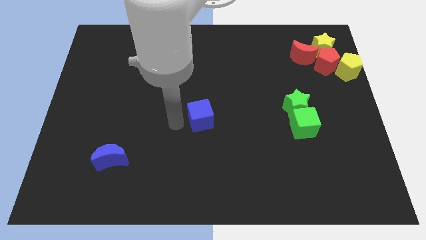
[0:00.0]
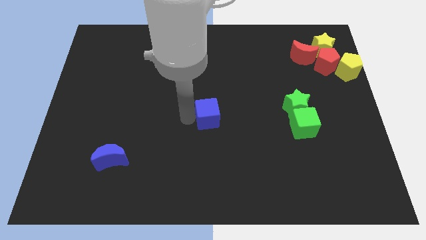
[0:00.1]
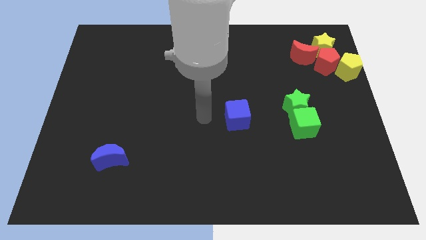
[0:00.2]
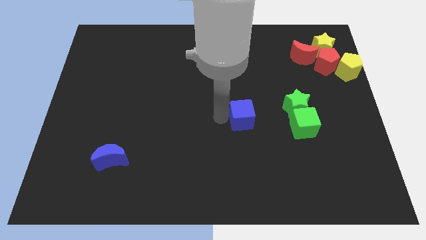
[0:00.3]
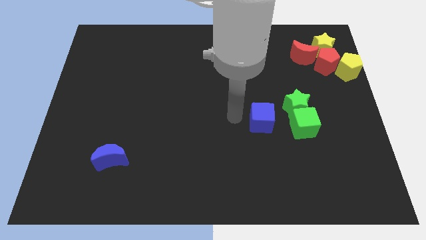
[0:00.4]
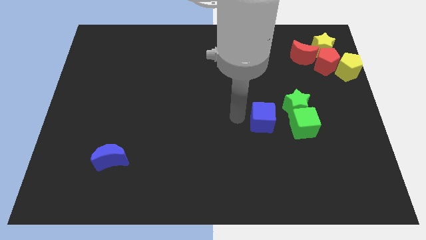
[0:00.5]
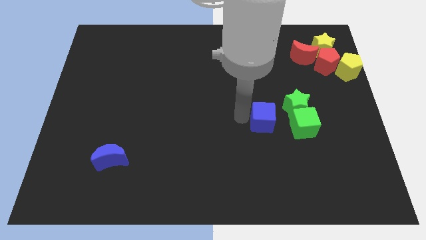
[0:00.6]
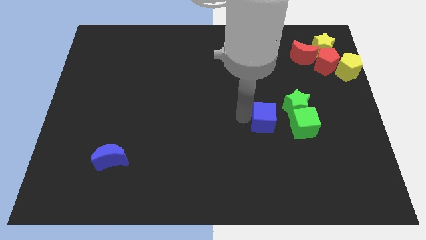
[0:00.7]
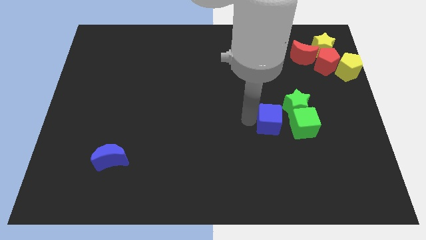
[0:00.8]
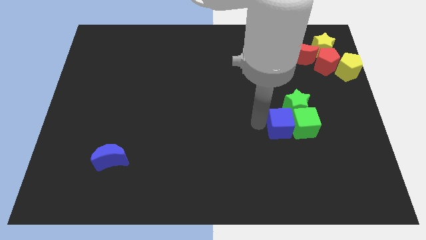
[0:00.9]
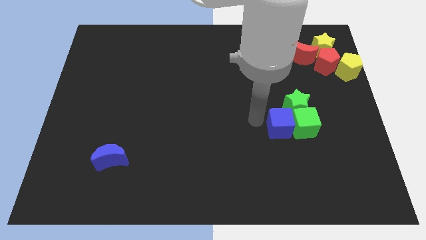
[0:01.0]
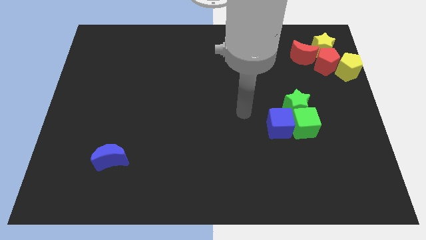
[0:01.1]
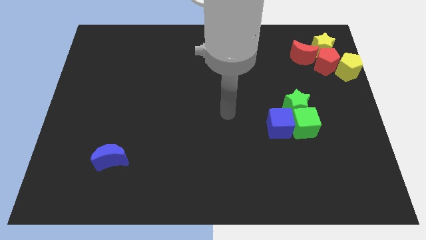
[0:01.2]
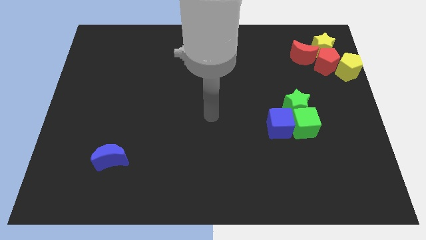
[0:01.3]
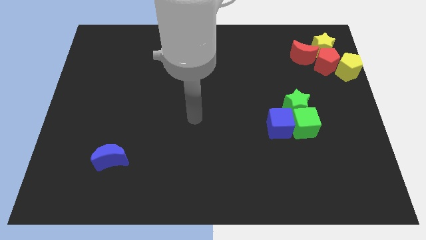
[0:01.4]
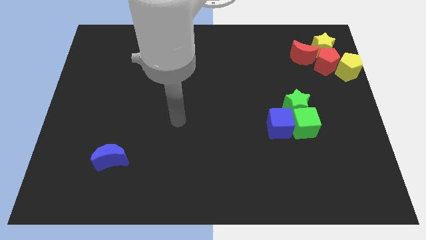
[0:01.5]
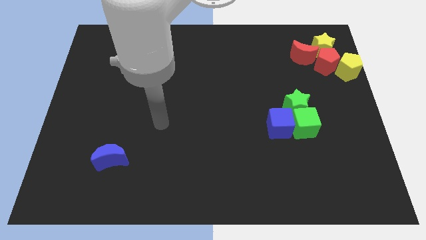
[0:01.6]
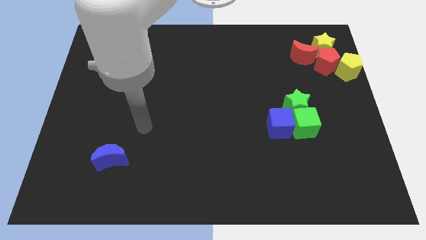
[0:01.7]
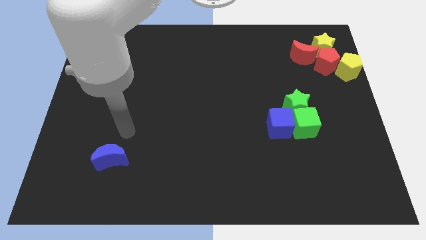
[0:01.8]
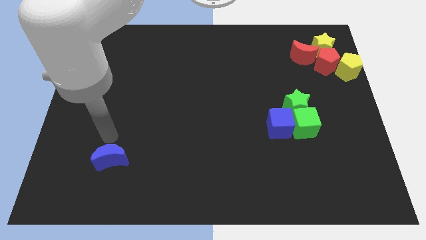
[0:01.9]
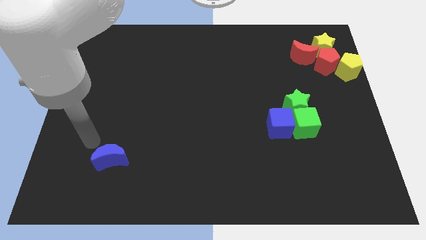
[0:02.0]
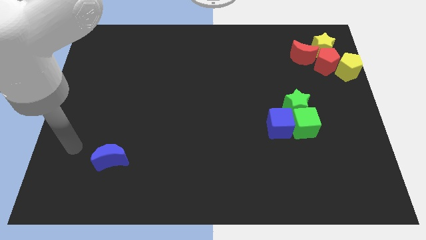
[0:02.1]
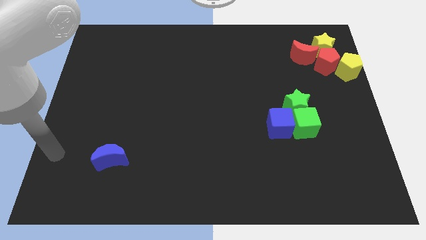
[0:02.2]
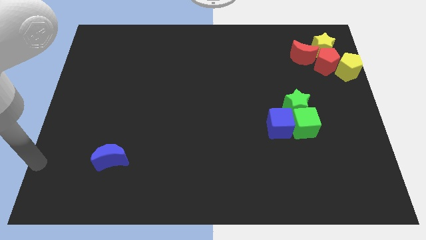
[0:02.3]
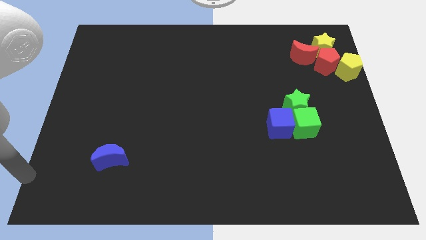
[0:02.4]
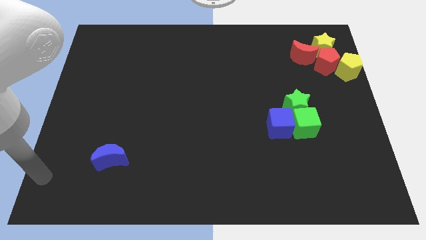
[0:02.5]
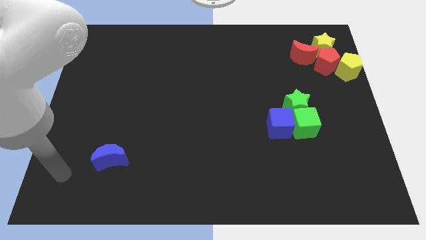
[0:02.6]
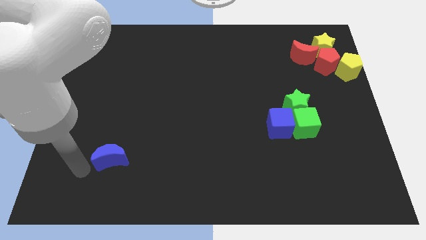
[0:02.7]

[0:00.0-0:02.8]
place the arm to the left of the blue moon

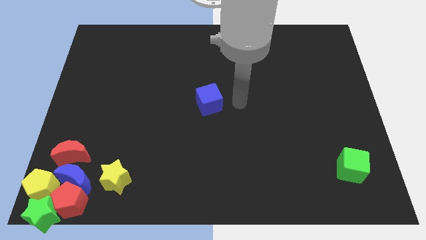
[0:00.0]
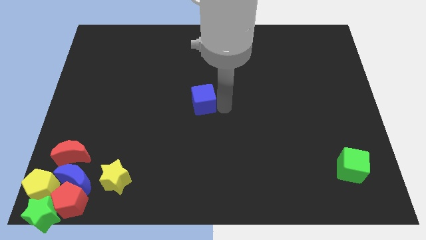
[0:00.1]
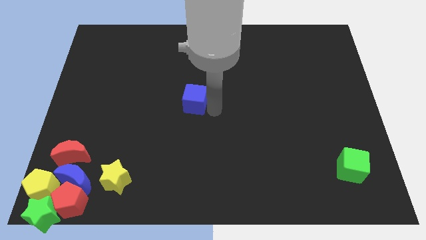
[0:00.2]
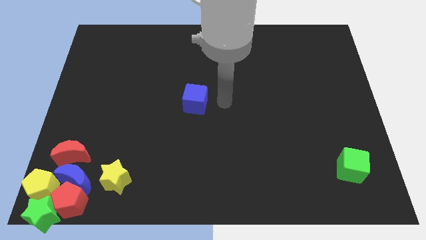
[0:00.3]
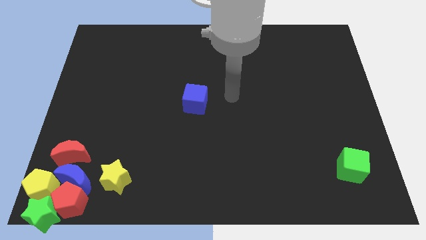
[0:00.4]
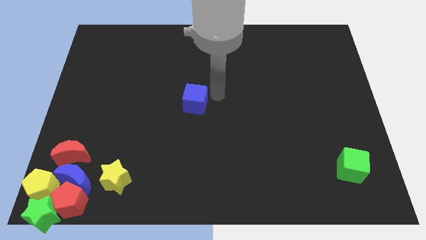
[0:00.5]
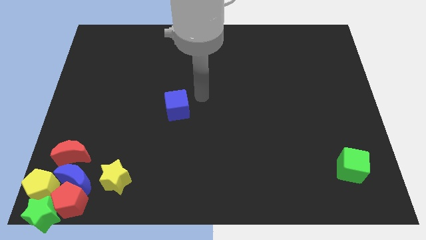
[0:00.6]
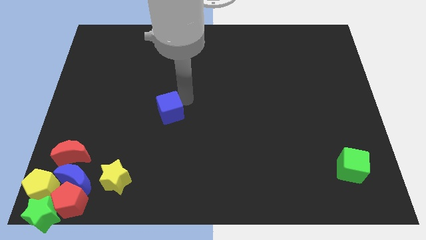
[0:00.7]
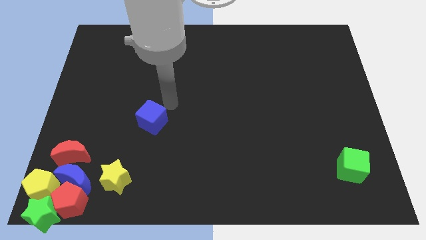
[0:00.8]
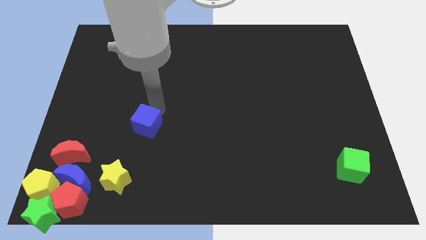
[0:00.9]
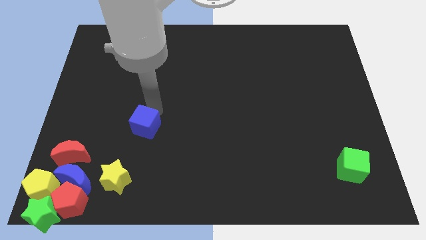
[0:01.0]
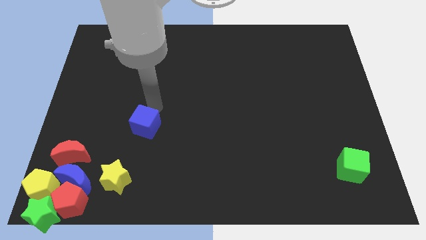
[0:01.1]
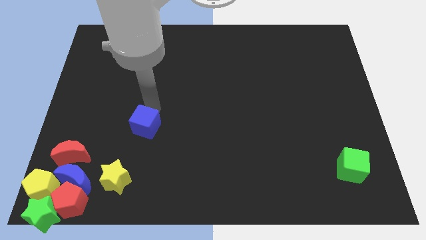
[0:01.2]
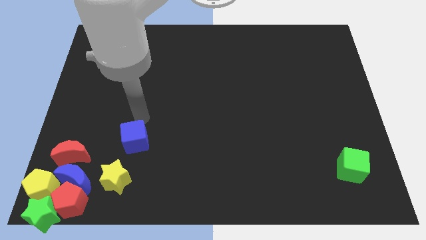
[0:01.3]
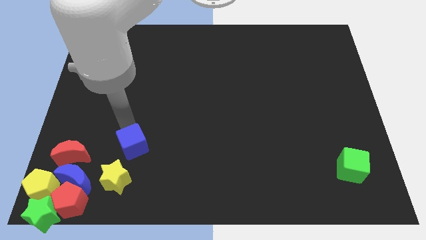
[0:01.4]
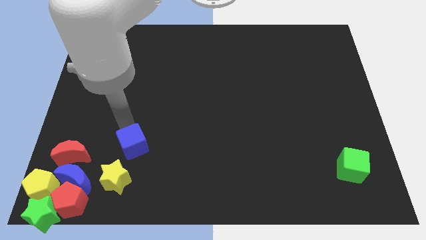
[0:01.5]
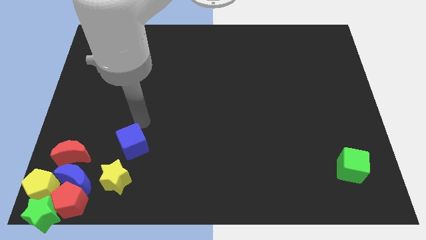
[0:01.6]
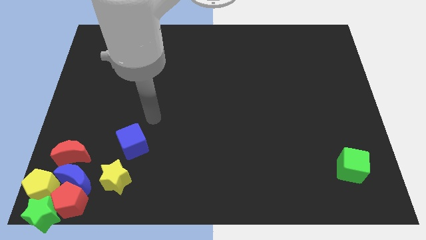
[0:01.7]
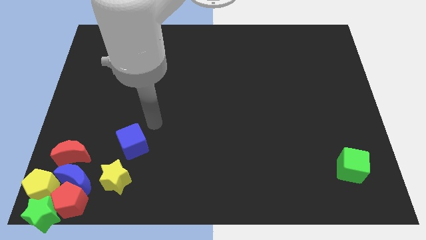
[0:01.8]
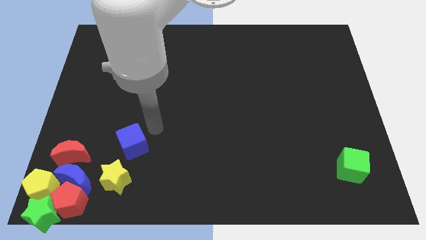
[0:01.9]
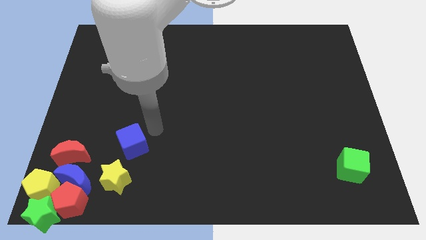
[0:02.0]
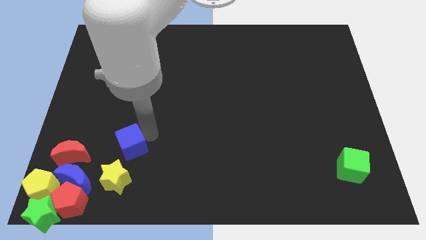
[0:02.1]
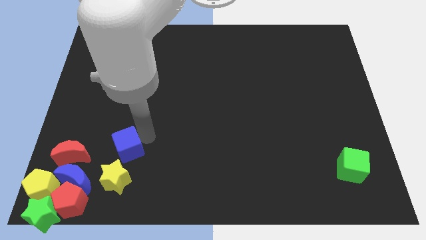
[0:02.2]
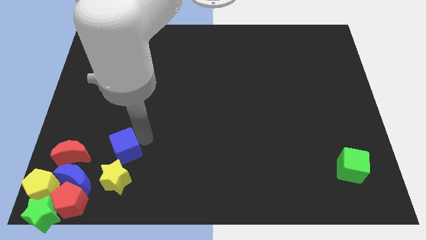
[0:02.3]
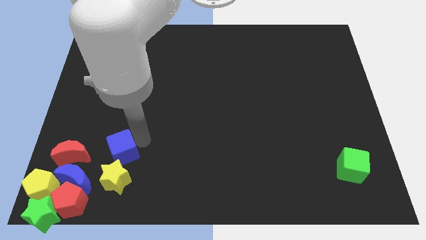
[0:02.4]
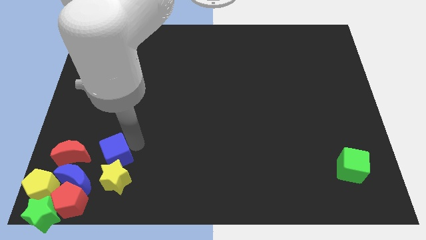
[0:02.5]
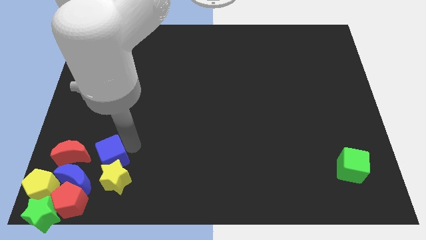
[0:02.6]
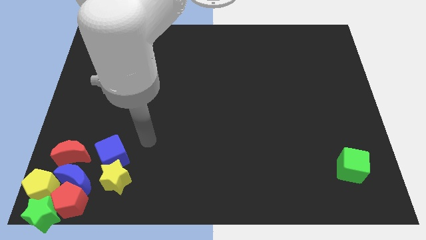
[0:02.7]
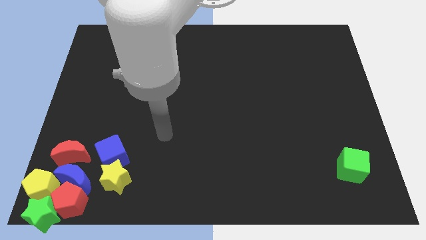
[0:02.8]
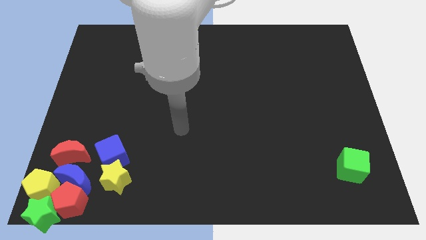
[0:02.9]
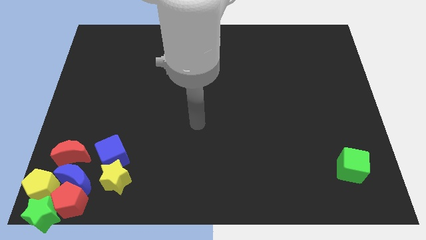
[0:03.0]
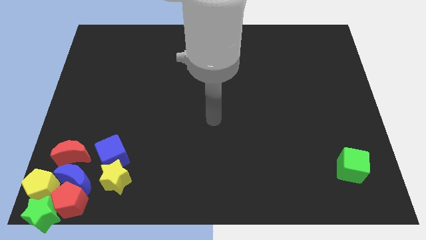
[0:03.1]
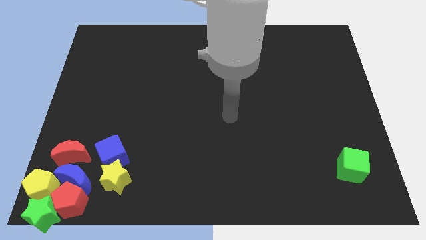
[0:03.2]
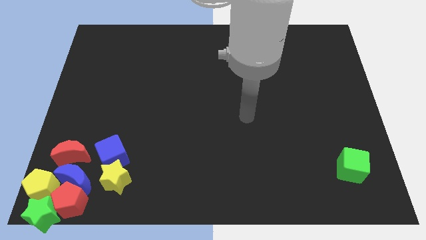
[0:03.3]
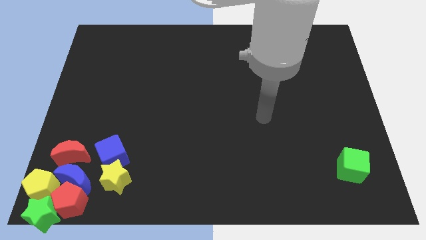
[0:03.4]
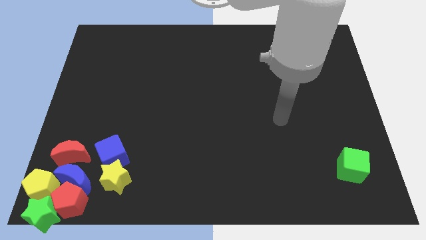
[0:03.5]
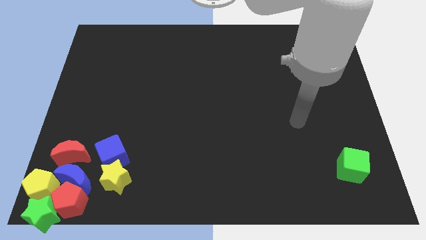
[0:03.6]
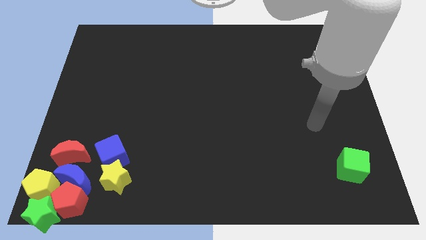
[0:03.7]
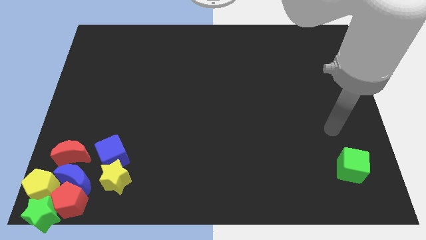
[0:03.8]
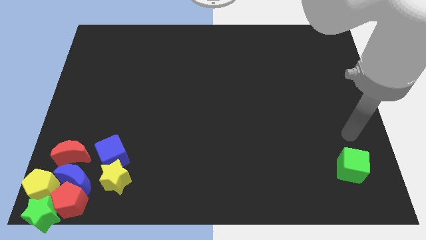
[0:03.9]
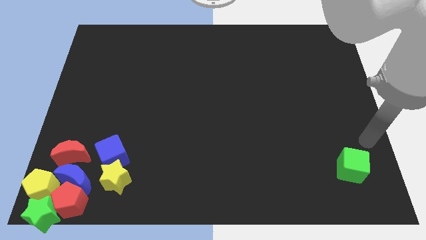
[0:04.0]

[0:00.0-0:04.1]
slide the blue cube diagonally top right to blue moon

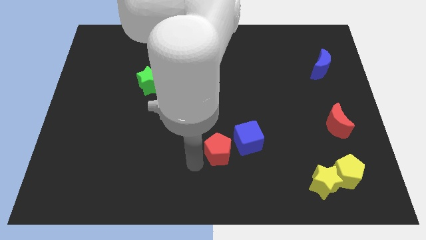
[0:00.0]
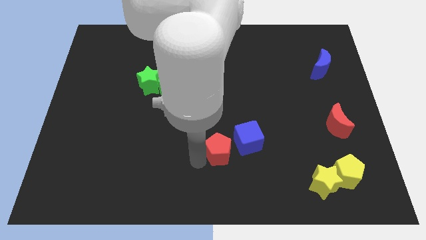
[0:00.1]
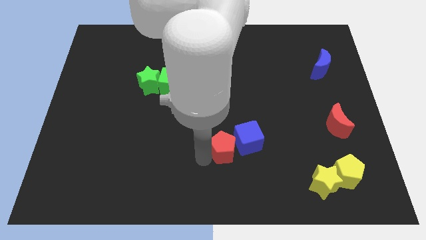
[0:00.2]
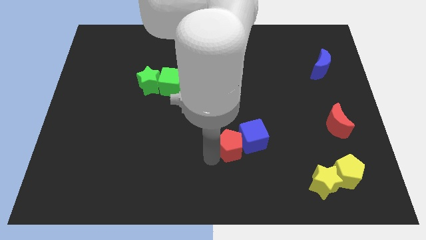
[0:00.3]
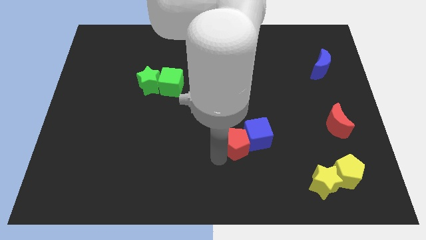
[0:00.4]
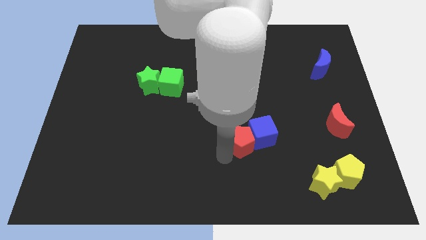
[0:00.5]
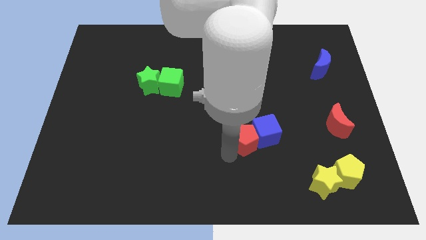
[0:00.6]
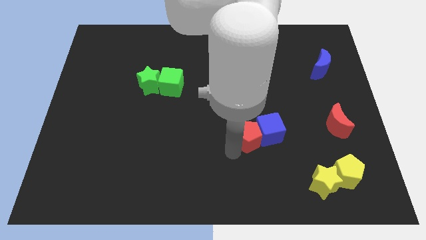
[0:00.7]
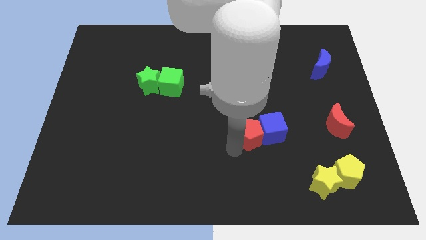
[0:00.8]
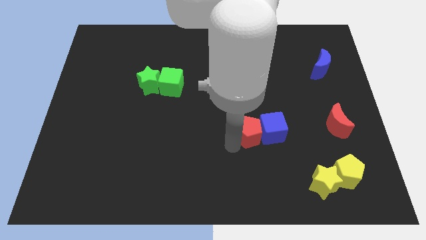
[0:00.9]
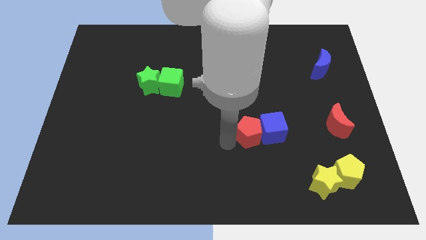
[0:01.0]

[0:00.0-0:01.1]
push the blue cube with the red pentagon

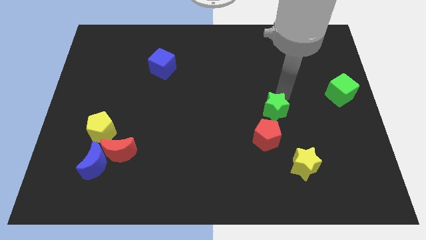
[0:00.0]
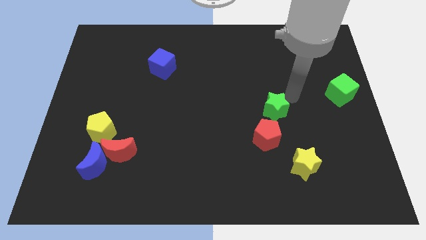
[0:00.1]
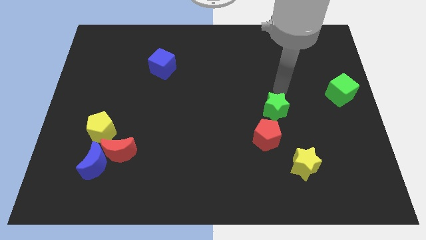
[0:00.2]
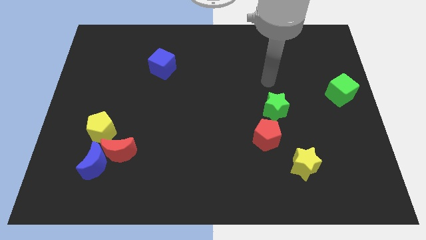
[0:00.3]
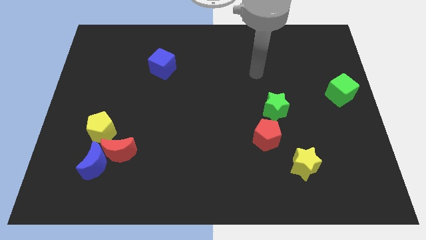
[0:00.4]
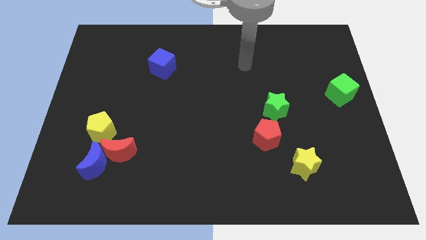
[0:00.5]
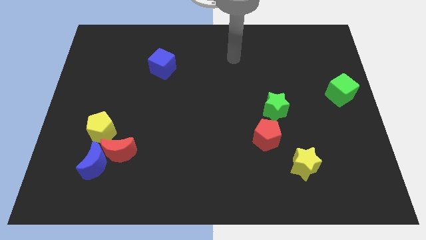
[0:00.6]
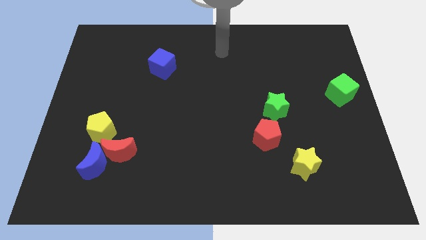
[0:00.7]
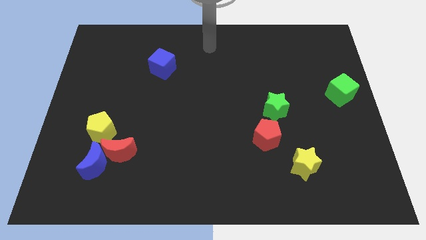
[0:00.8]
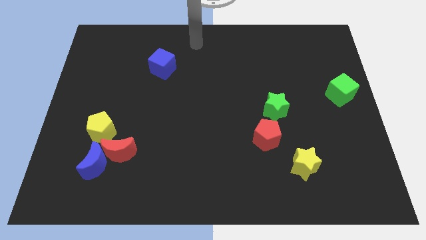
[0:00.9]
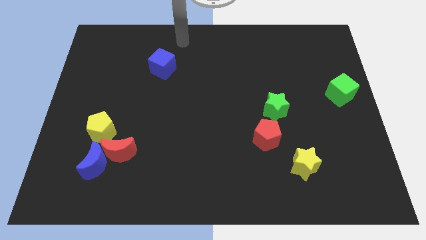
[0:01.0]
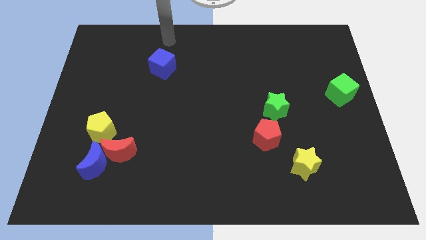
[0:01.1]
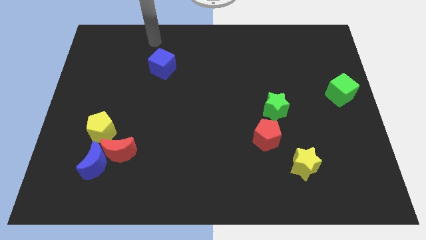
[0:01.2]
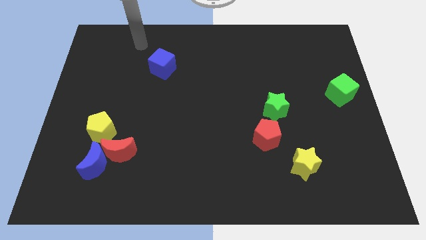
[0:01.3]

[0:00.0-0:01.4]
place your arm to the top of blue cube
